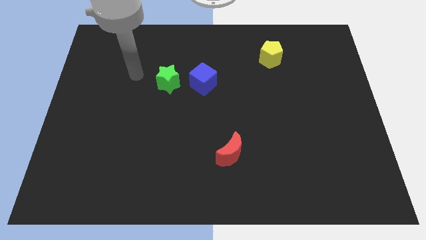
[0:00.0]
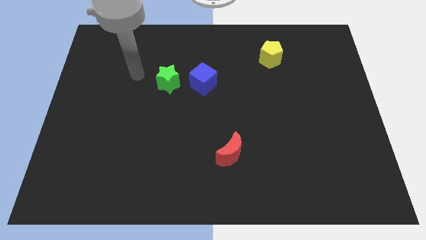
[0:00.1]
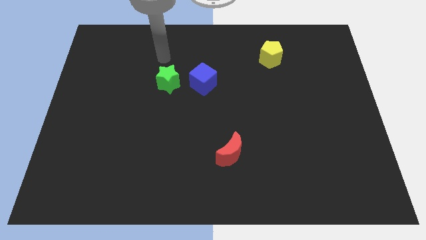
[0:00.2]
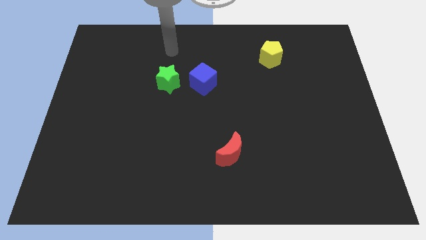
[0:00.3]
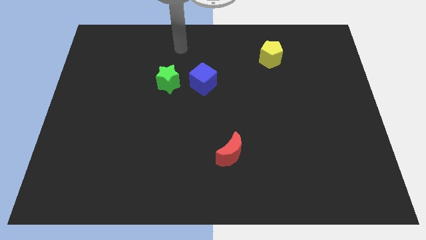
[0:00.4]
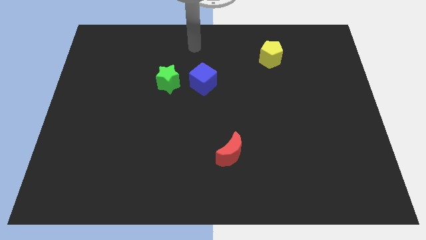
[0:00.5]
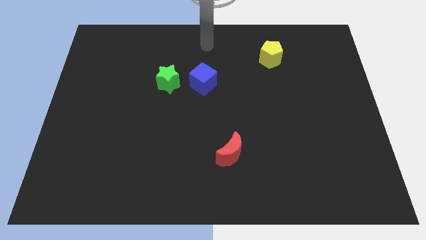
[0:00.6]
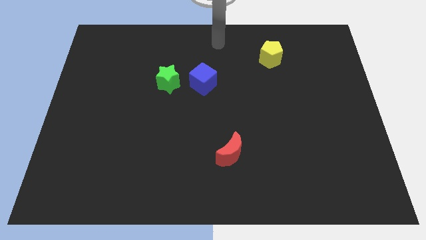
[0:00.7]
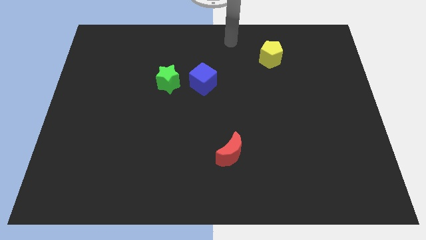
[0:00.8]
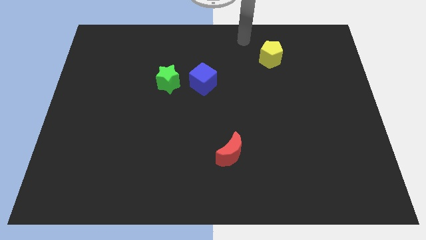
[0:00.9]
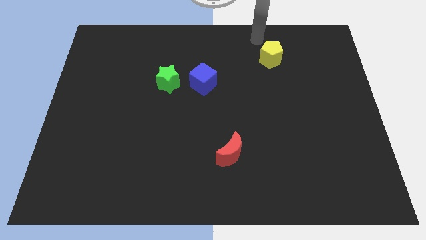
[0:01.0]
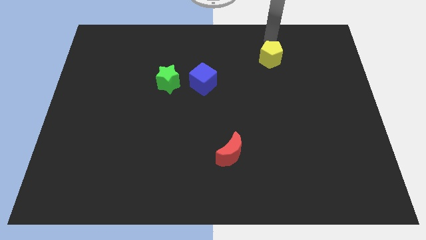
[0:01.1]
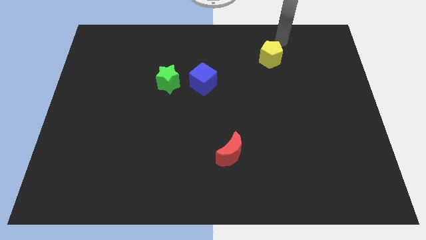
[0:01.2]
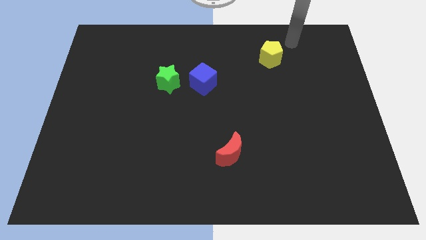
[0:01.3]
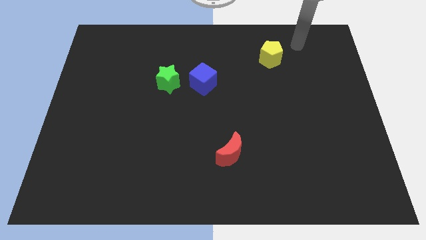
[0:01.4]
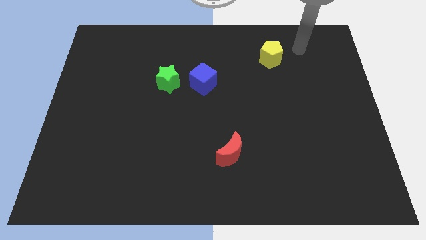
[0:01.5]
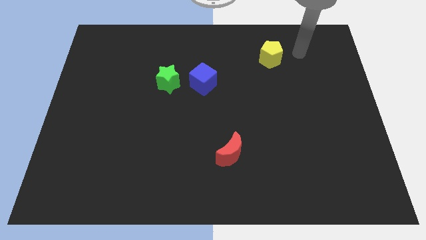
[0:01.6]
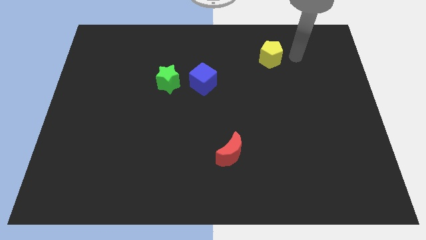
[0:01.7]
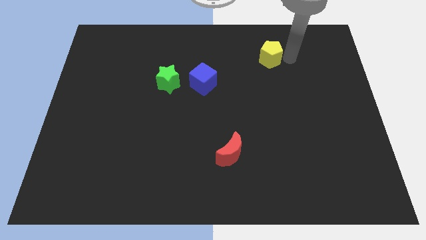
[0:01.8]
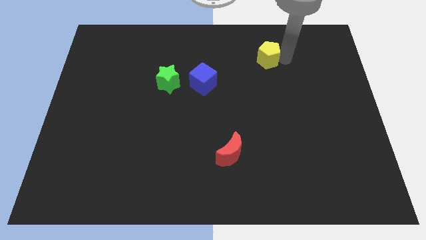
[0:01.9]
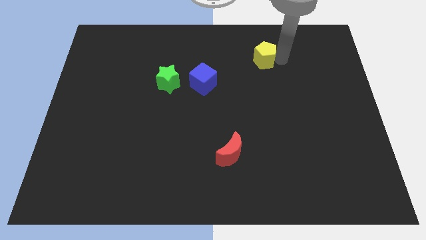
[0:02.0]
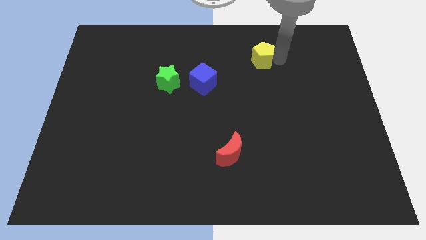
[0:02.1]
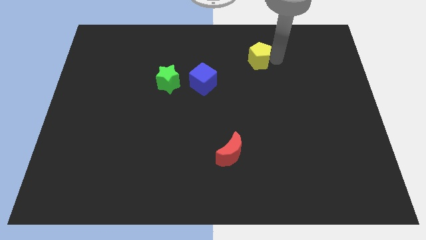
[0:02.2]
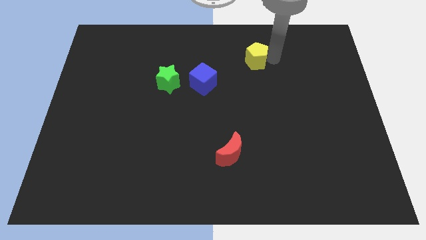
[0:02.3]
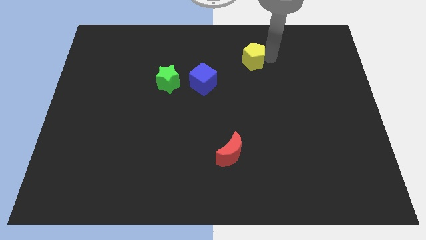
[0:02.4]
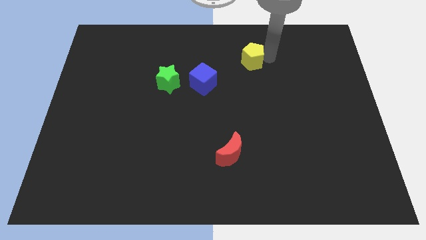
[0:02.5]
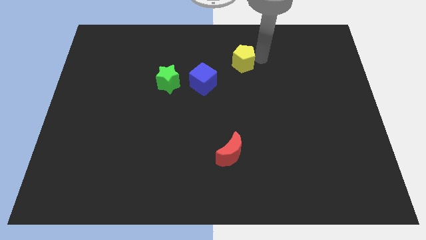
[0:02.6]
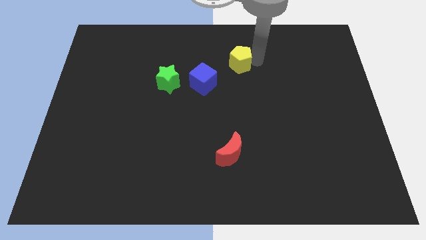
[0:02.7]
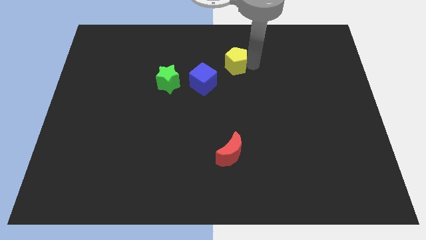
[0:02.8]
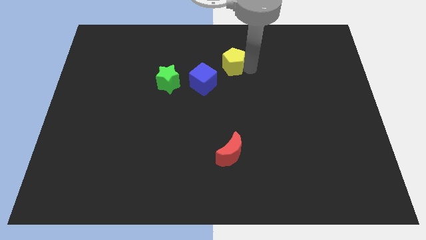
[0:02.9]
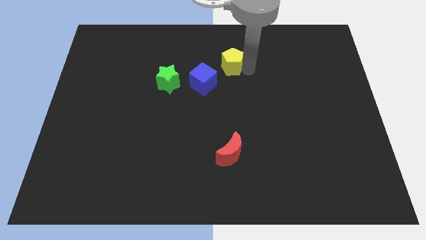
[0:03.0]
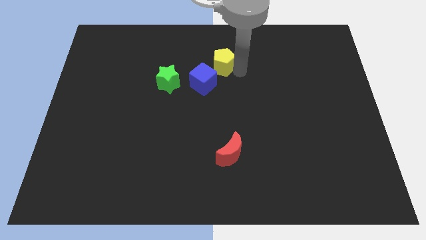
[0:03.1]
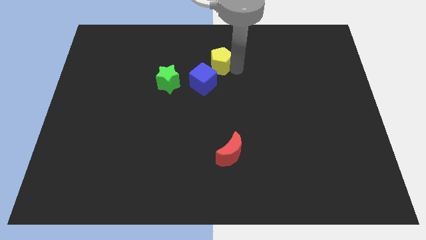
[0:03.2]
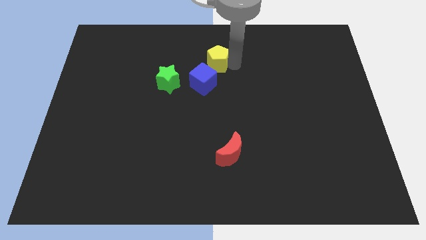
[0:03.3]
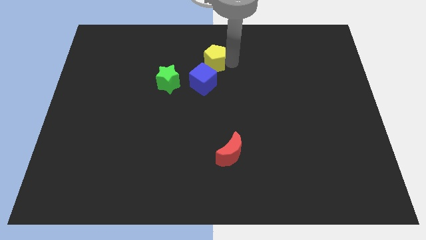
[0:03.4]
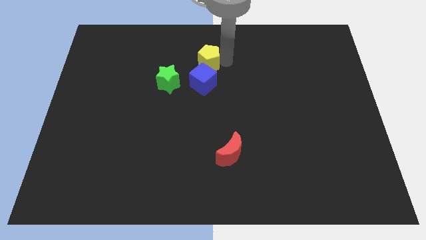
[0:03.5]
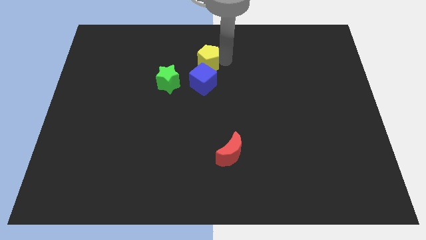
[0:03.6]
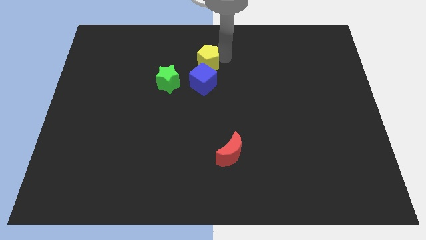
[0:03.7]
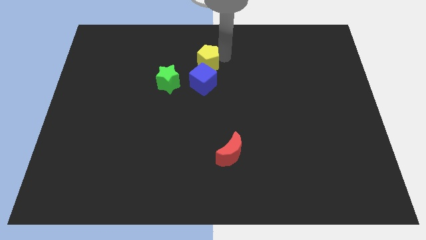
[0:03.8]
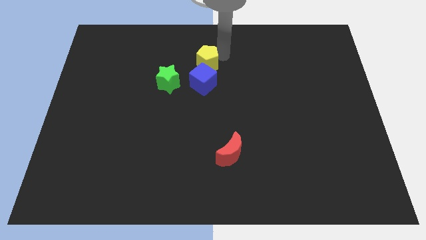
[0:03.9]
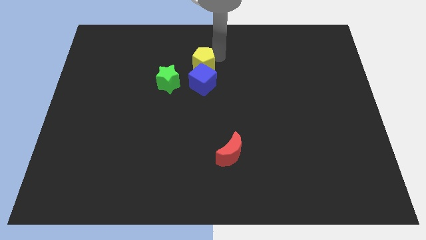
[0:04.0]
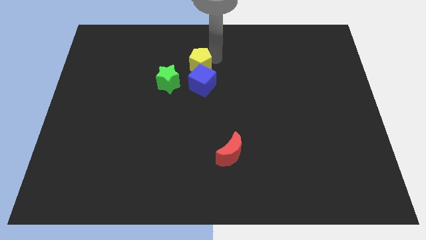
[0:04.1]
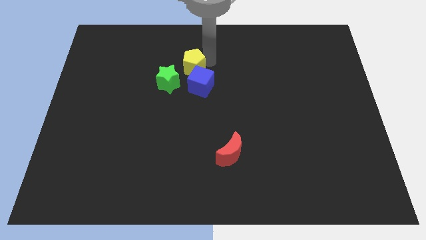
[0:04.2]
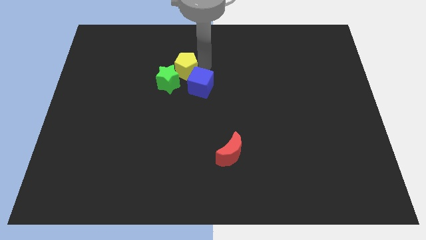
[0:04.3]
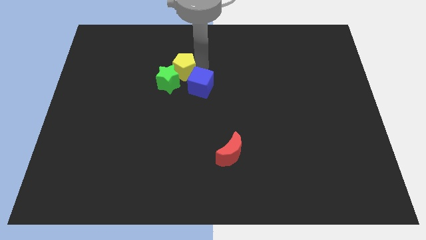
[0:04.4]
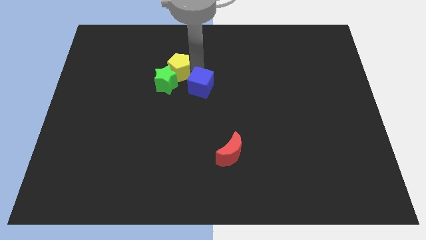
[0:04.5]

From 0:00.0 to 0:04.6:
move the yellow pentagon towards the green block

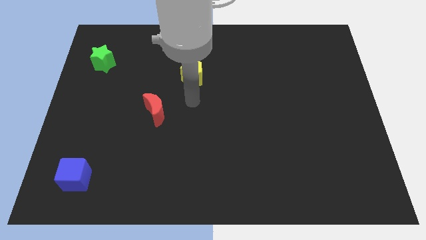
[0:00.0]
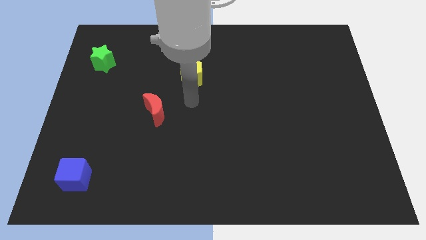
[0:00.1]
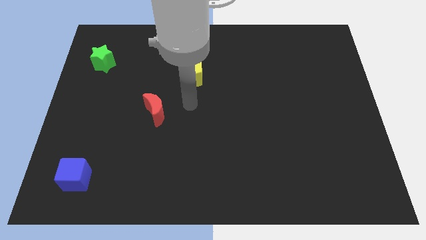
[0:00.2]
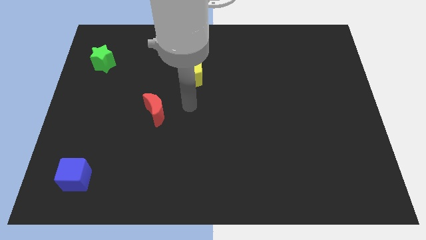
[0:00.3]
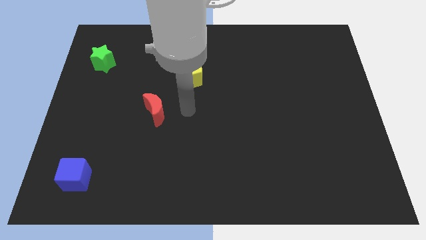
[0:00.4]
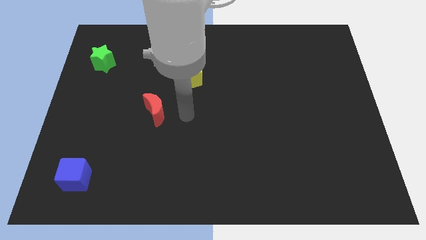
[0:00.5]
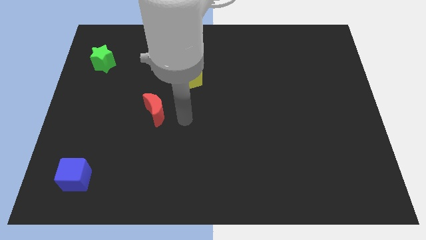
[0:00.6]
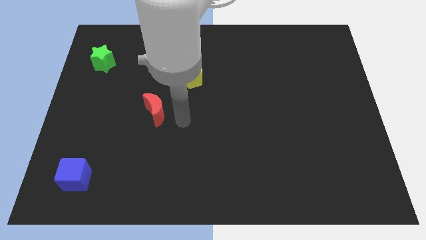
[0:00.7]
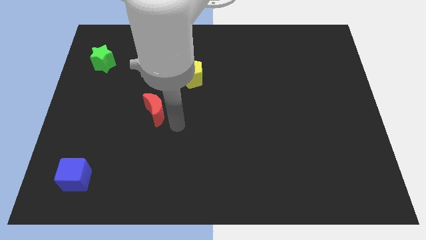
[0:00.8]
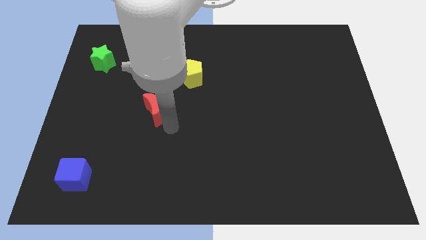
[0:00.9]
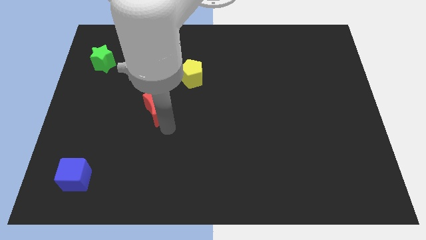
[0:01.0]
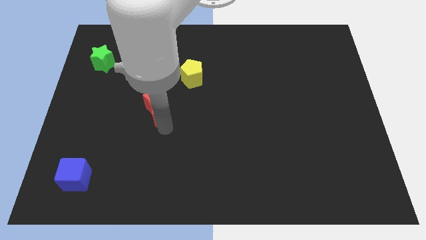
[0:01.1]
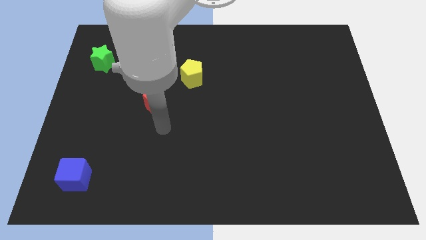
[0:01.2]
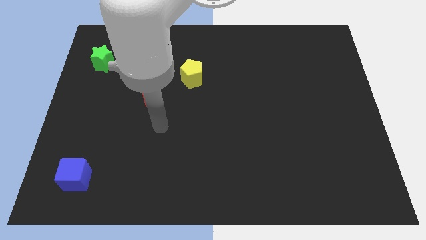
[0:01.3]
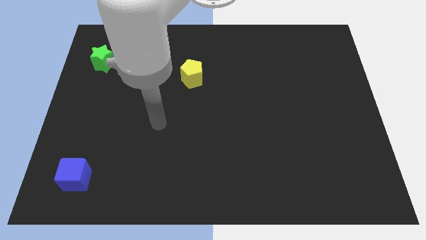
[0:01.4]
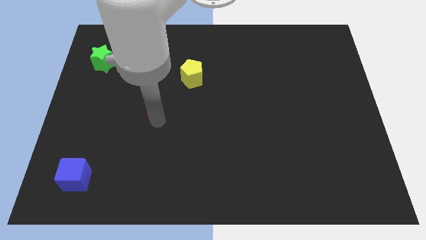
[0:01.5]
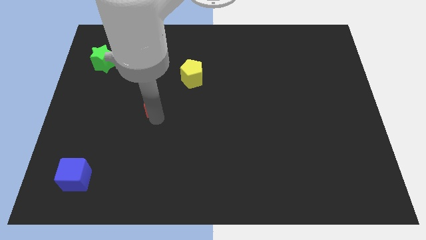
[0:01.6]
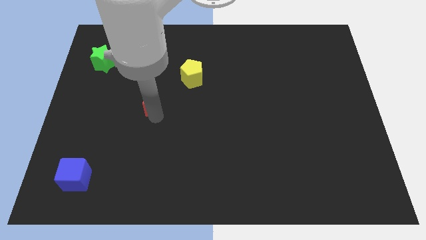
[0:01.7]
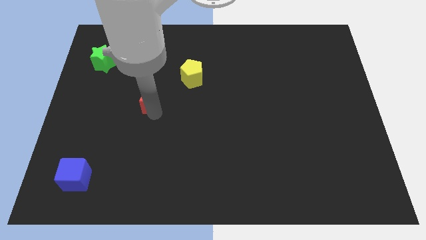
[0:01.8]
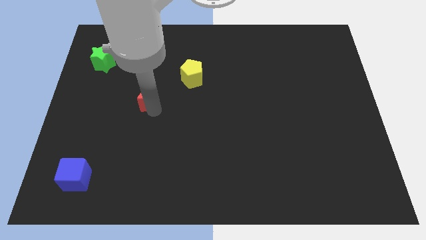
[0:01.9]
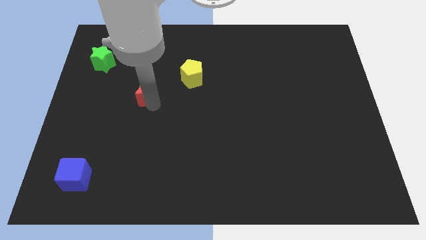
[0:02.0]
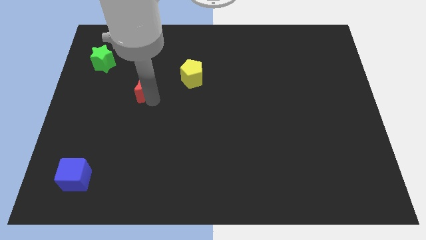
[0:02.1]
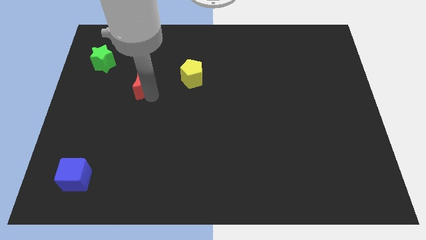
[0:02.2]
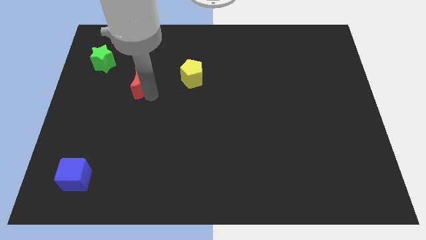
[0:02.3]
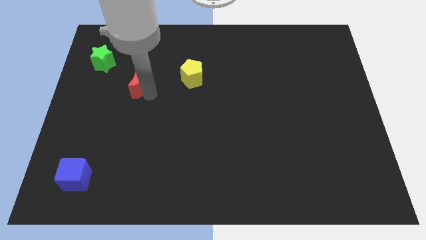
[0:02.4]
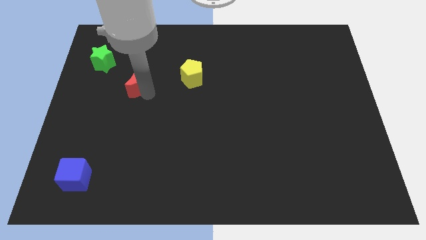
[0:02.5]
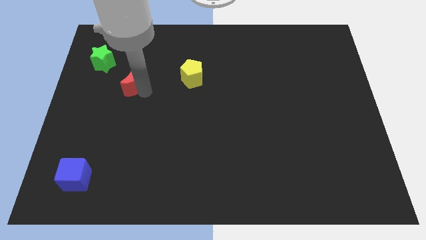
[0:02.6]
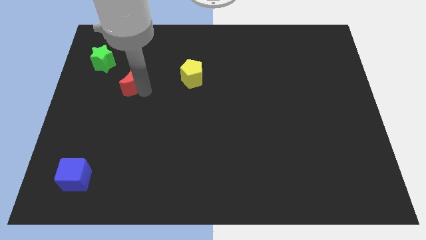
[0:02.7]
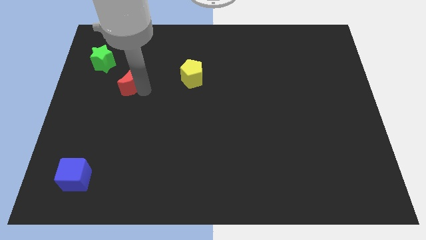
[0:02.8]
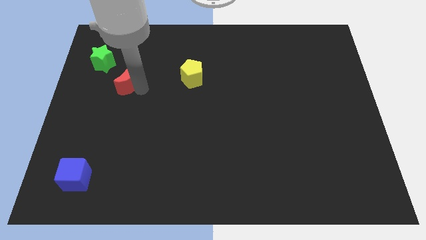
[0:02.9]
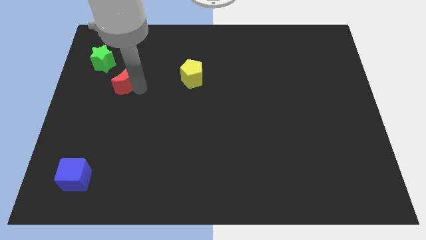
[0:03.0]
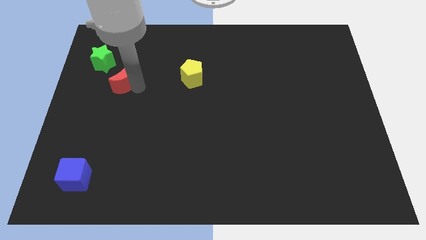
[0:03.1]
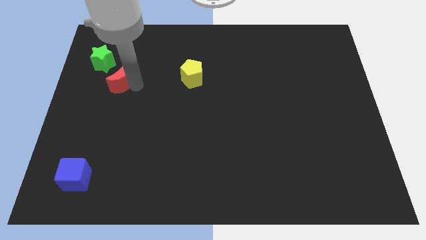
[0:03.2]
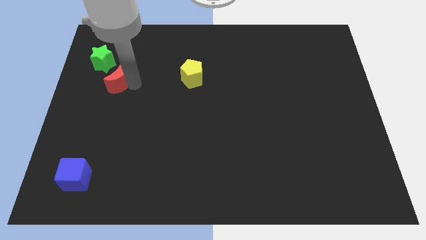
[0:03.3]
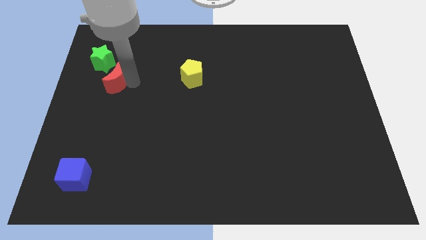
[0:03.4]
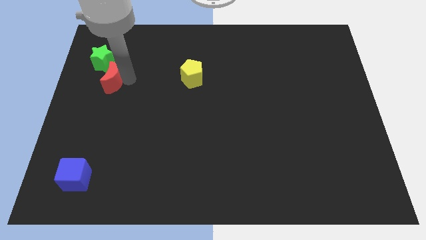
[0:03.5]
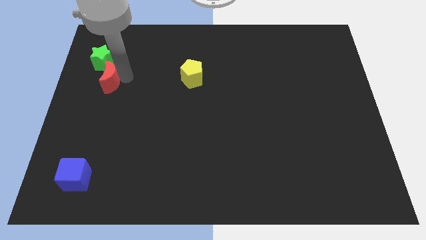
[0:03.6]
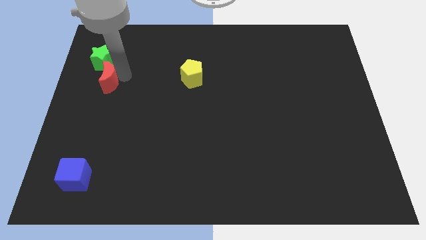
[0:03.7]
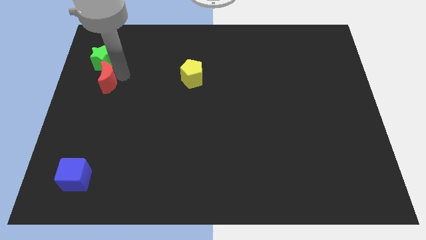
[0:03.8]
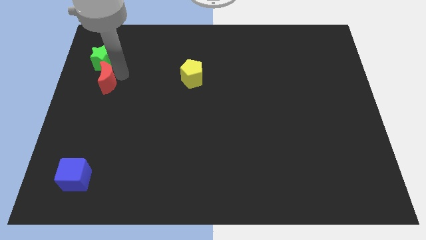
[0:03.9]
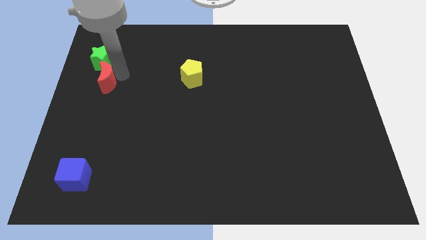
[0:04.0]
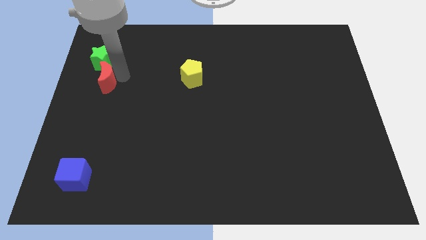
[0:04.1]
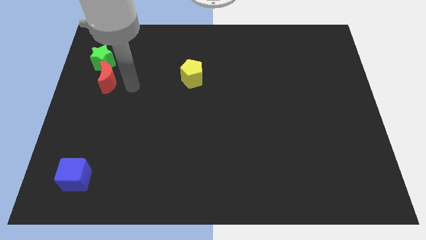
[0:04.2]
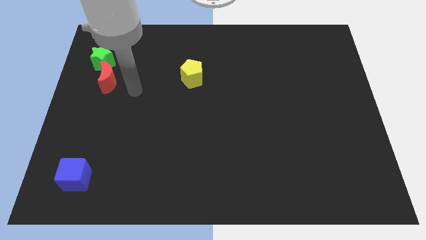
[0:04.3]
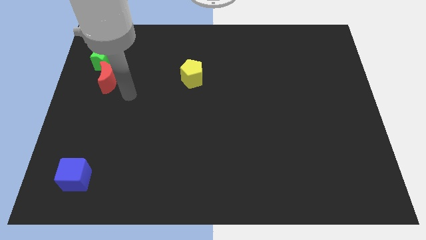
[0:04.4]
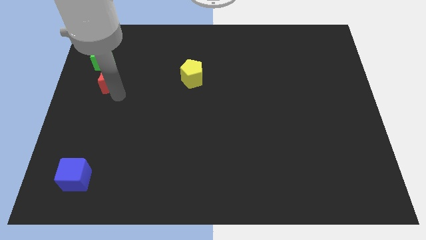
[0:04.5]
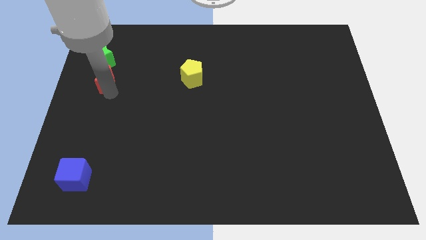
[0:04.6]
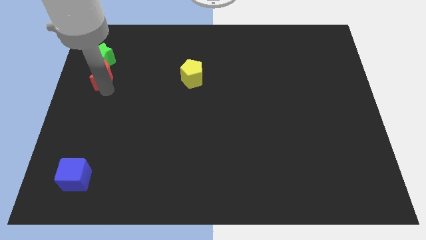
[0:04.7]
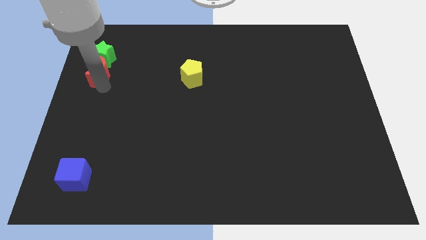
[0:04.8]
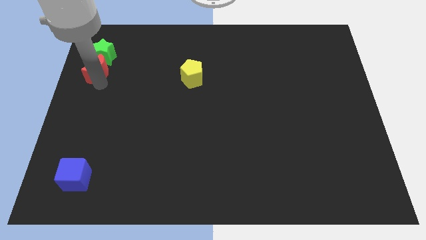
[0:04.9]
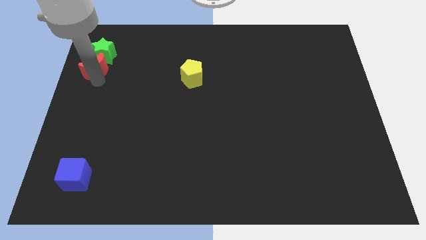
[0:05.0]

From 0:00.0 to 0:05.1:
push the red moon close to the star
